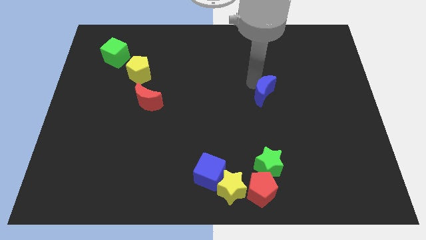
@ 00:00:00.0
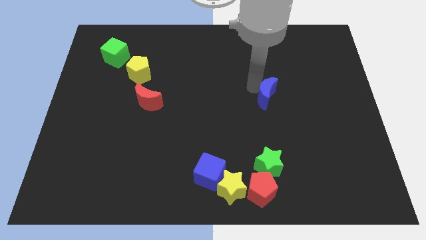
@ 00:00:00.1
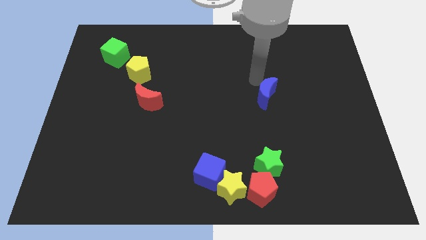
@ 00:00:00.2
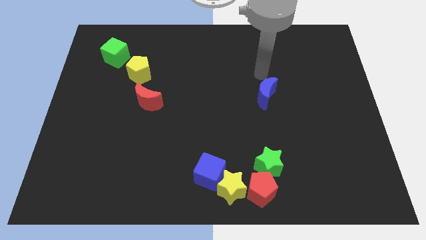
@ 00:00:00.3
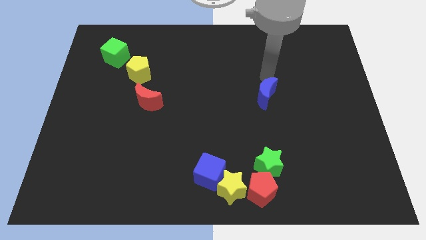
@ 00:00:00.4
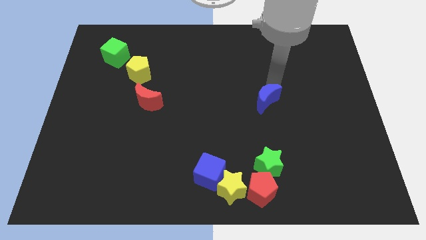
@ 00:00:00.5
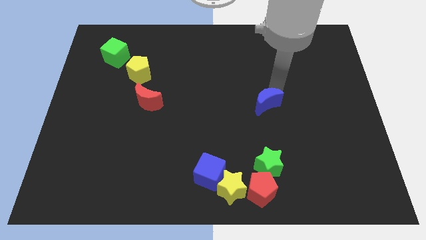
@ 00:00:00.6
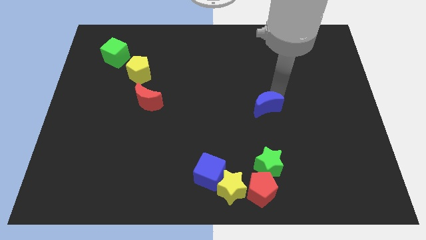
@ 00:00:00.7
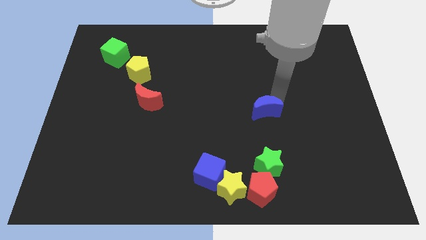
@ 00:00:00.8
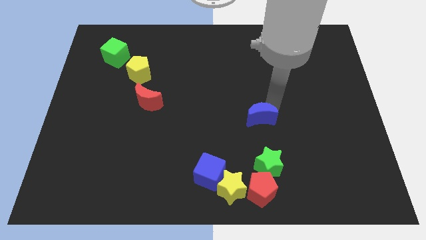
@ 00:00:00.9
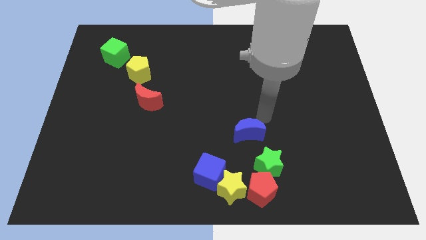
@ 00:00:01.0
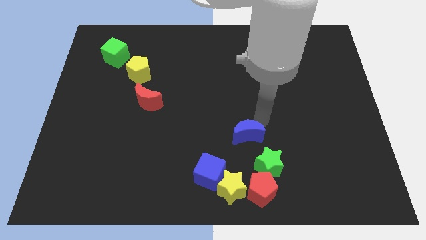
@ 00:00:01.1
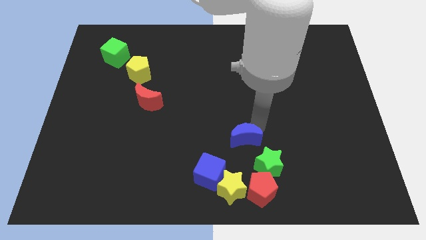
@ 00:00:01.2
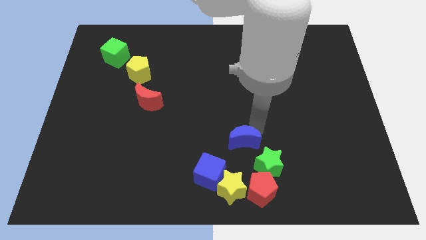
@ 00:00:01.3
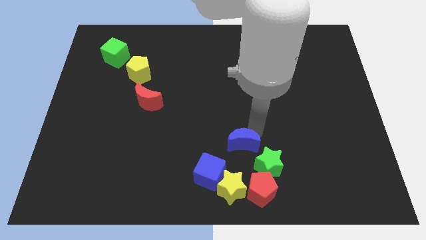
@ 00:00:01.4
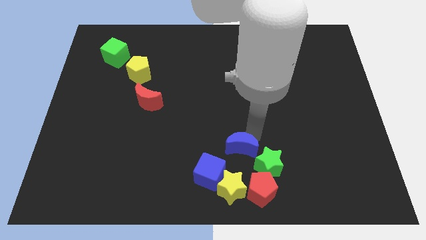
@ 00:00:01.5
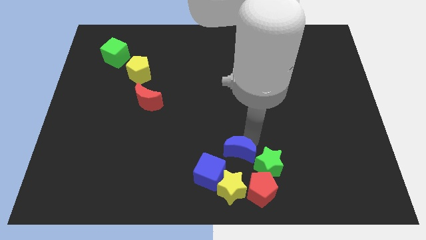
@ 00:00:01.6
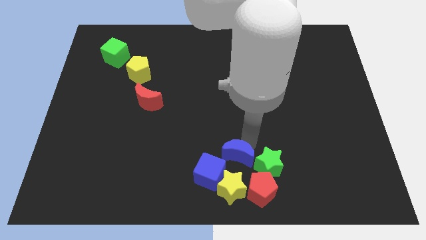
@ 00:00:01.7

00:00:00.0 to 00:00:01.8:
place the blue crescent above the yellow star

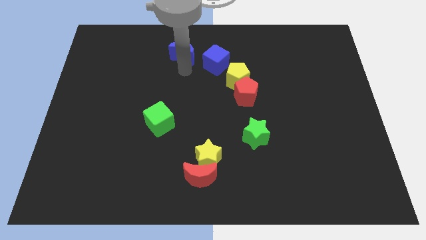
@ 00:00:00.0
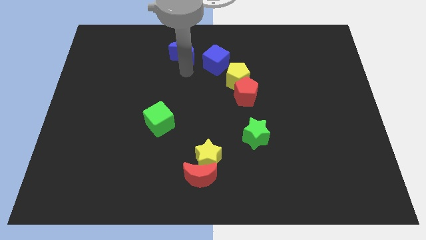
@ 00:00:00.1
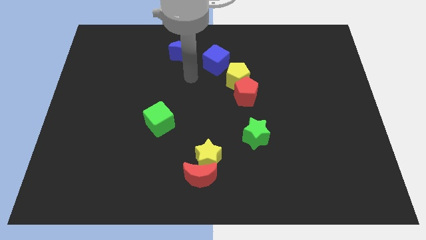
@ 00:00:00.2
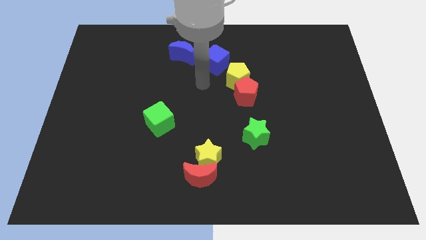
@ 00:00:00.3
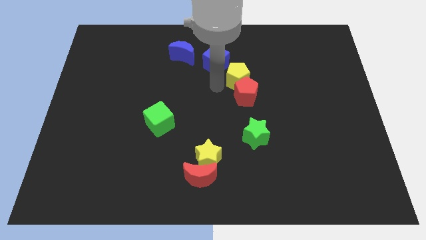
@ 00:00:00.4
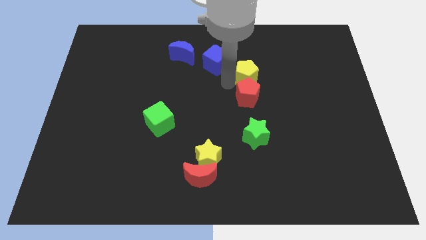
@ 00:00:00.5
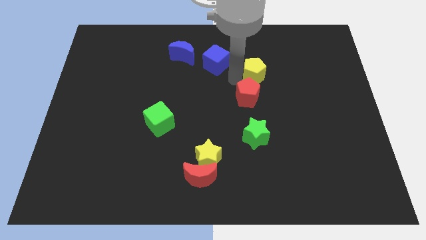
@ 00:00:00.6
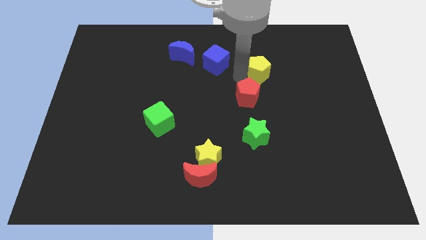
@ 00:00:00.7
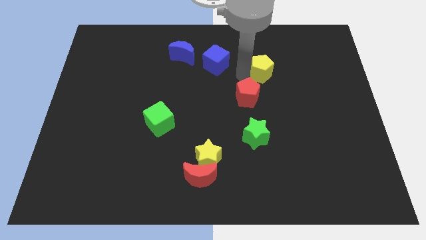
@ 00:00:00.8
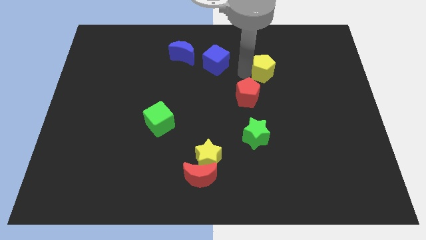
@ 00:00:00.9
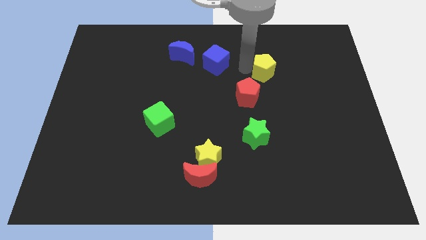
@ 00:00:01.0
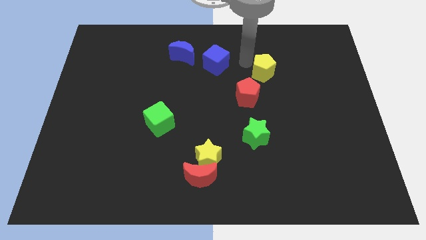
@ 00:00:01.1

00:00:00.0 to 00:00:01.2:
move the yellow pentagon away from the red pentagon

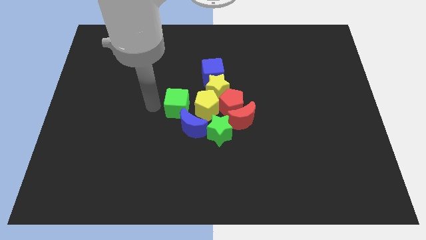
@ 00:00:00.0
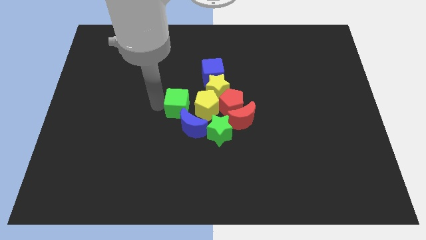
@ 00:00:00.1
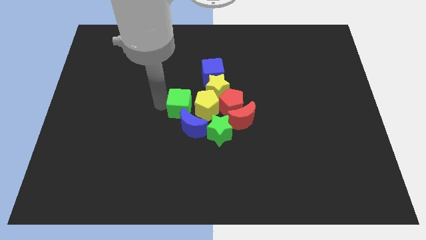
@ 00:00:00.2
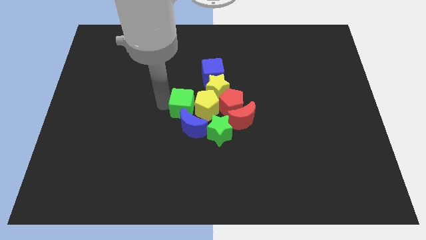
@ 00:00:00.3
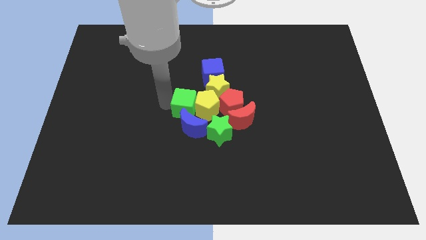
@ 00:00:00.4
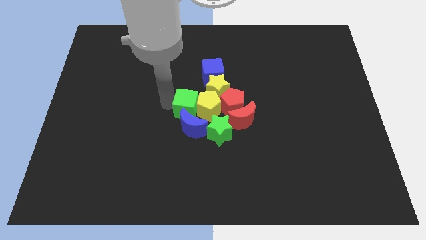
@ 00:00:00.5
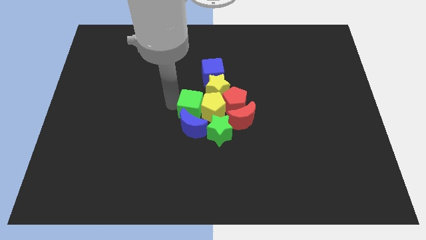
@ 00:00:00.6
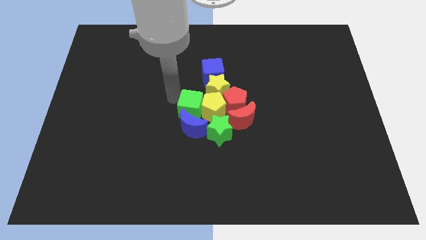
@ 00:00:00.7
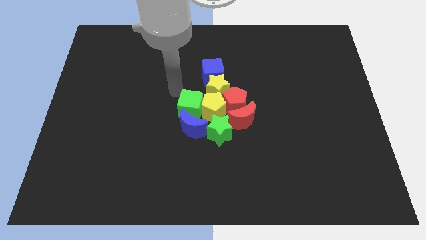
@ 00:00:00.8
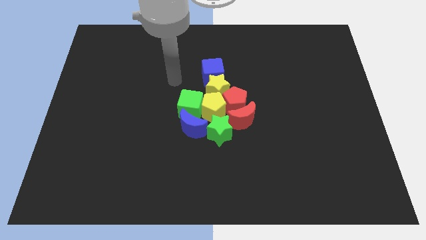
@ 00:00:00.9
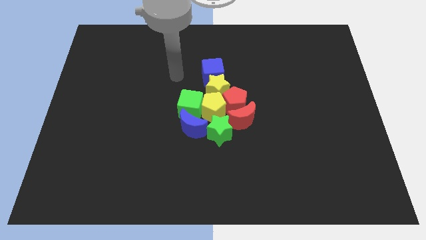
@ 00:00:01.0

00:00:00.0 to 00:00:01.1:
push the green cube into the yellow pentagon

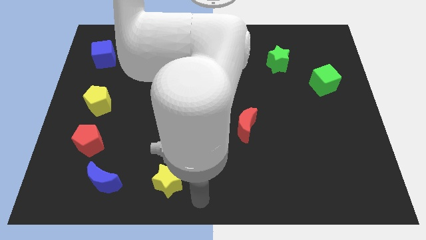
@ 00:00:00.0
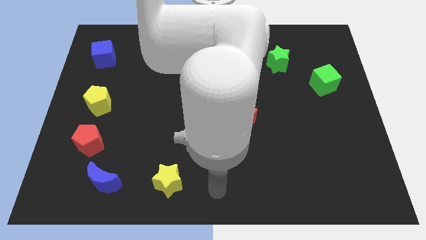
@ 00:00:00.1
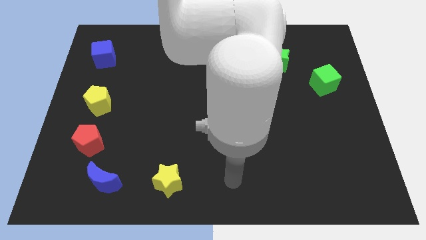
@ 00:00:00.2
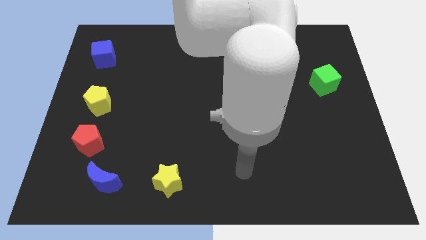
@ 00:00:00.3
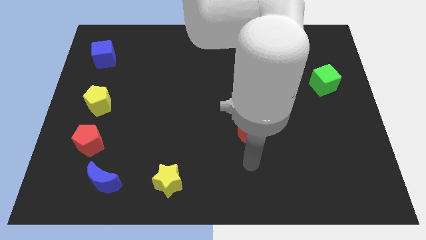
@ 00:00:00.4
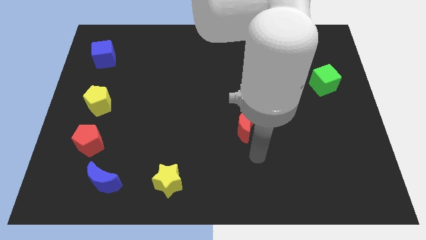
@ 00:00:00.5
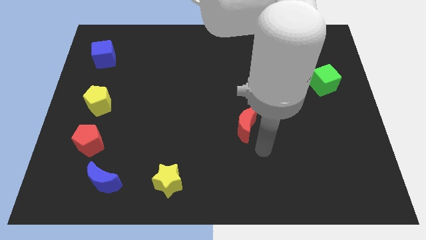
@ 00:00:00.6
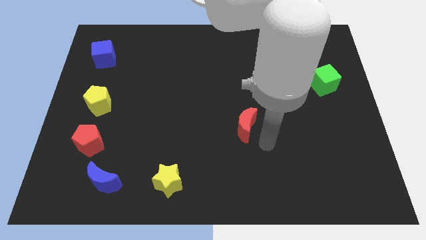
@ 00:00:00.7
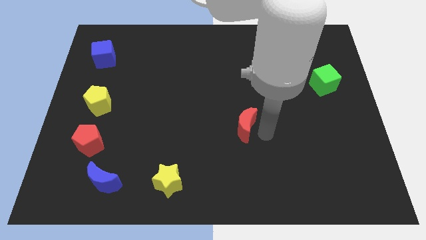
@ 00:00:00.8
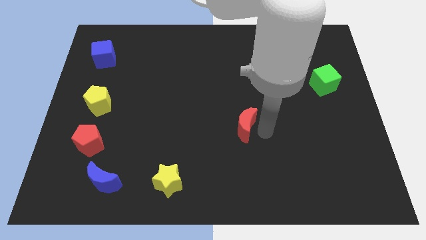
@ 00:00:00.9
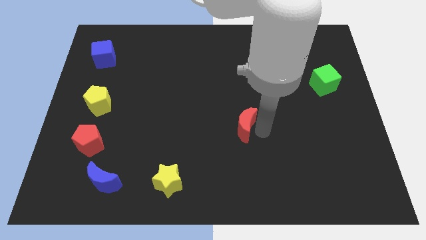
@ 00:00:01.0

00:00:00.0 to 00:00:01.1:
move your arm to the right of red moon

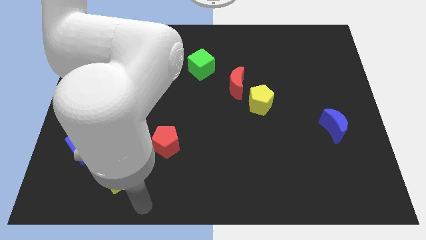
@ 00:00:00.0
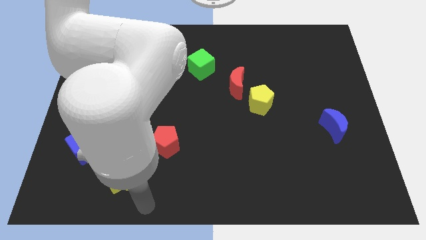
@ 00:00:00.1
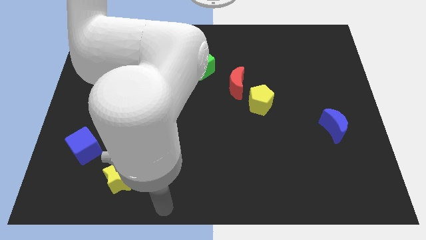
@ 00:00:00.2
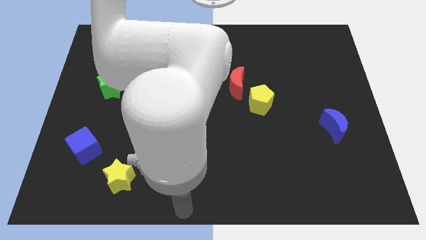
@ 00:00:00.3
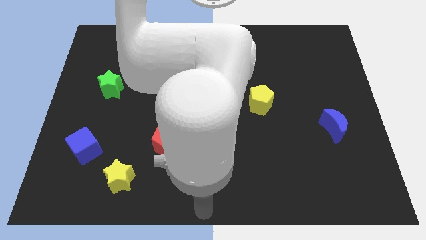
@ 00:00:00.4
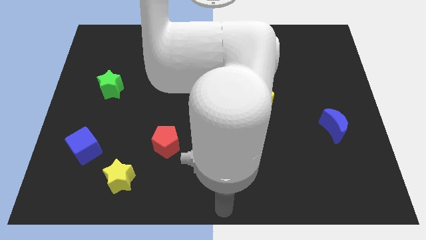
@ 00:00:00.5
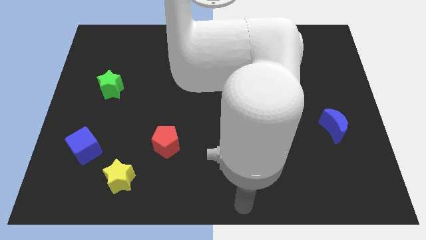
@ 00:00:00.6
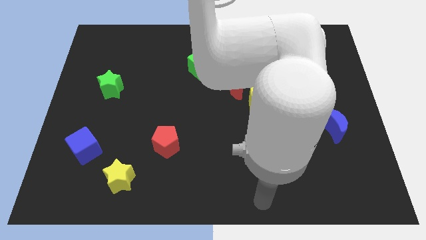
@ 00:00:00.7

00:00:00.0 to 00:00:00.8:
move the arm away from the yellow star

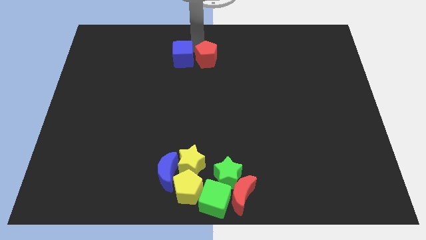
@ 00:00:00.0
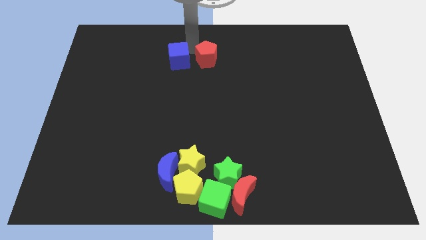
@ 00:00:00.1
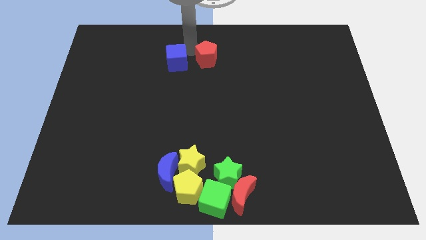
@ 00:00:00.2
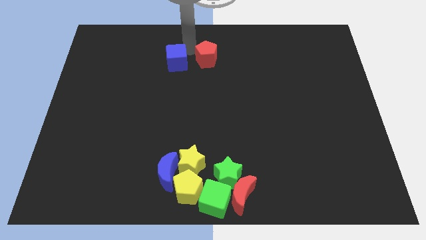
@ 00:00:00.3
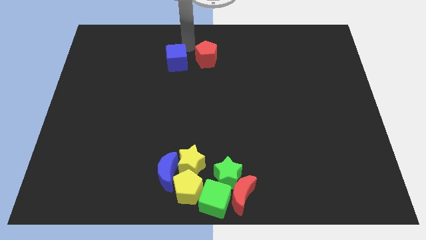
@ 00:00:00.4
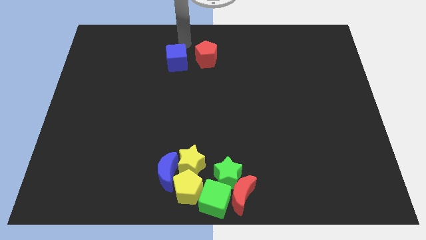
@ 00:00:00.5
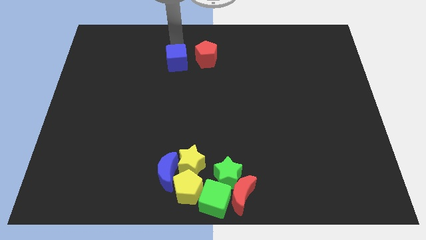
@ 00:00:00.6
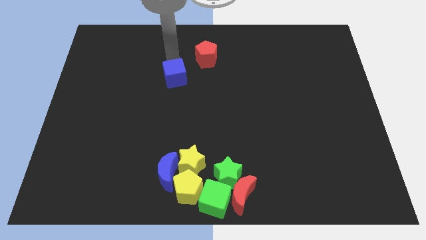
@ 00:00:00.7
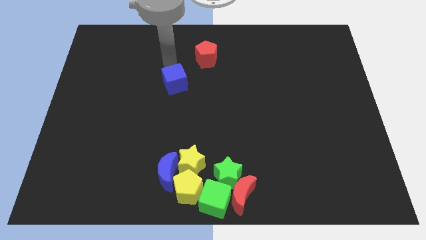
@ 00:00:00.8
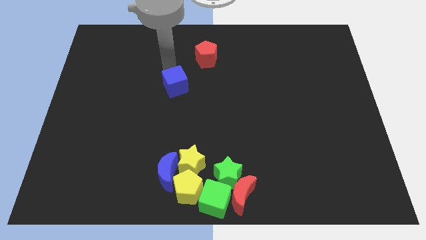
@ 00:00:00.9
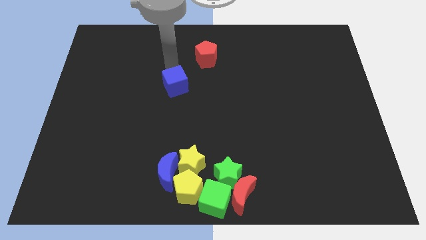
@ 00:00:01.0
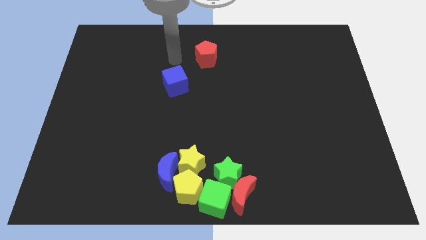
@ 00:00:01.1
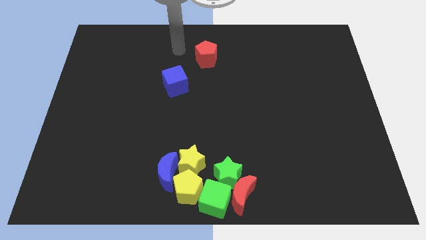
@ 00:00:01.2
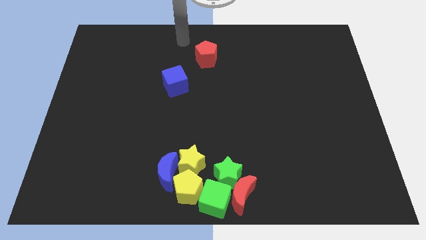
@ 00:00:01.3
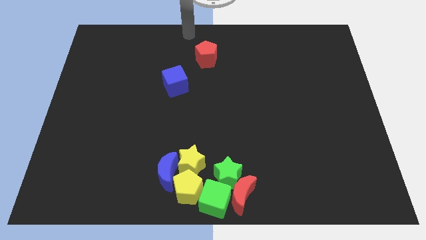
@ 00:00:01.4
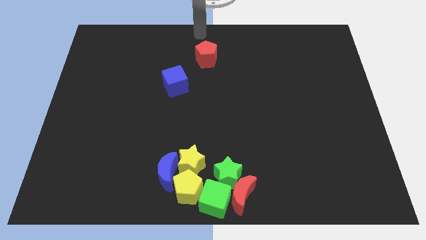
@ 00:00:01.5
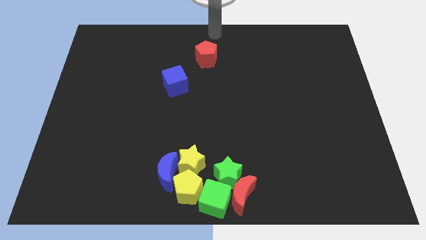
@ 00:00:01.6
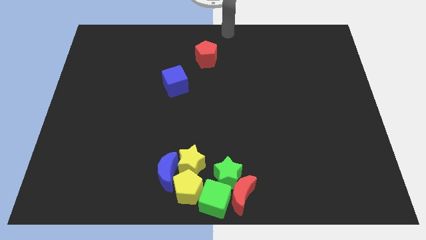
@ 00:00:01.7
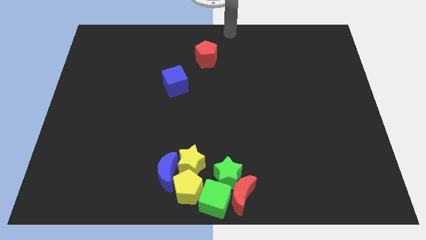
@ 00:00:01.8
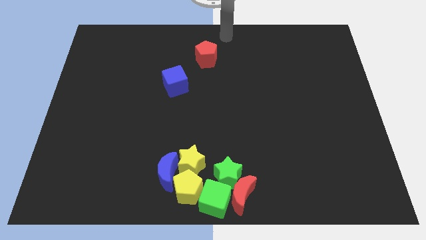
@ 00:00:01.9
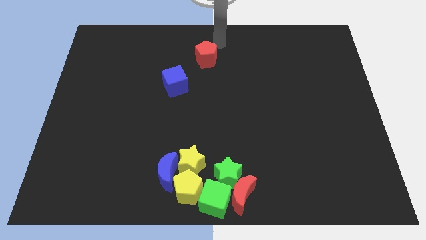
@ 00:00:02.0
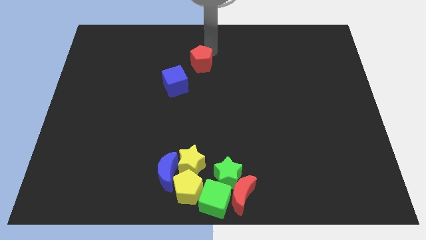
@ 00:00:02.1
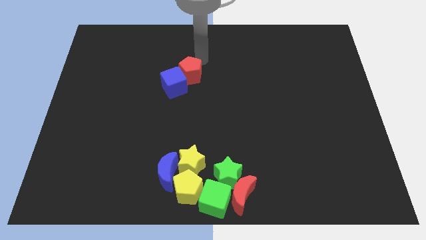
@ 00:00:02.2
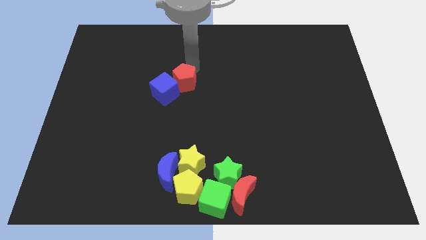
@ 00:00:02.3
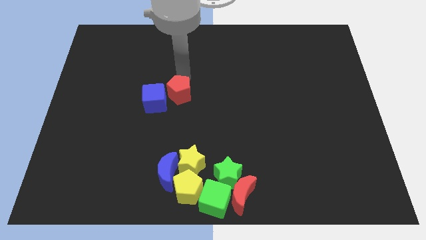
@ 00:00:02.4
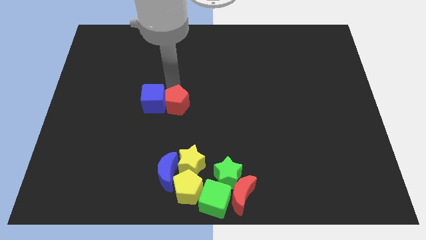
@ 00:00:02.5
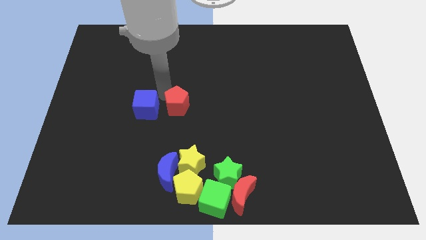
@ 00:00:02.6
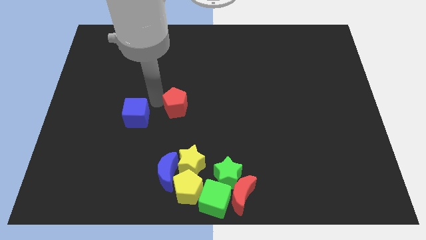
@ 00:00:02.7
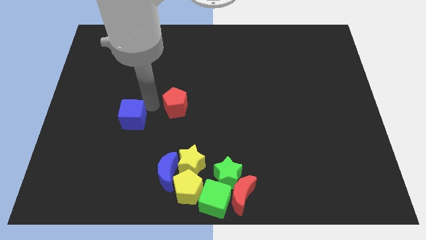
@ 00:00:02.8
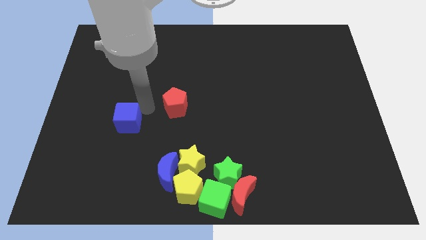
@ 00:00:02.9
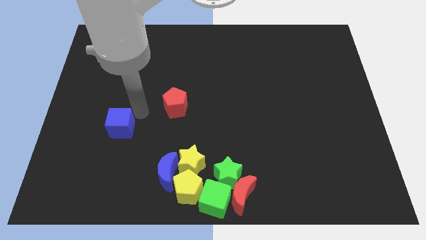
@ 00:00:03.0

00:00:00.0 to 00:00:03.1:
push blue cube to left center of the board
